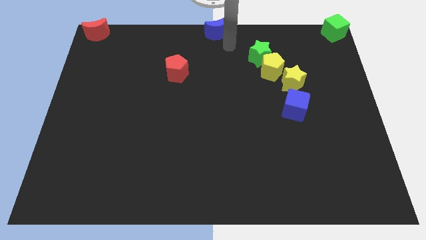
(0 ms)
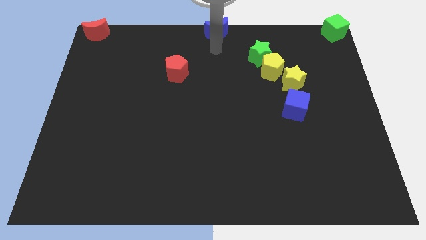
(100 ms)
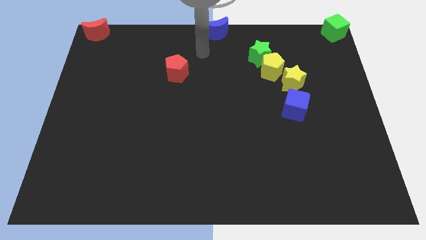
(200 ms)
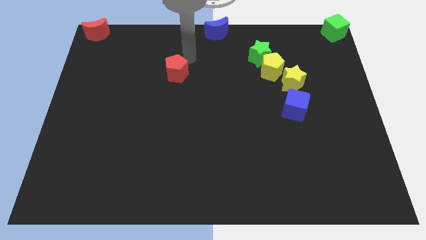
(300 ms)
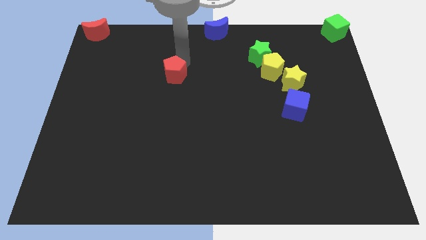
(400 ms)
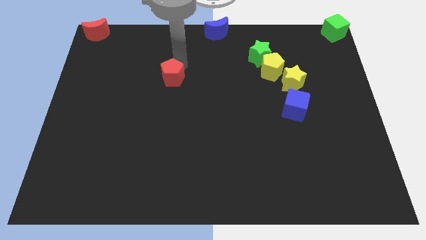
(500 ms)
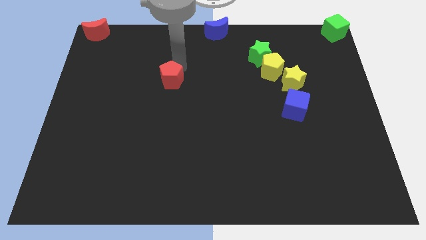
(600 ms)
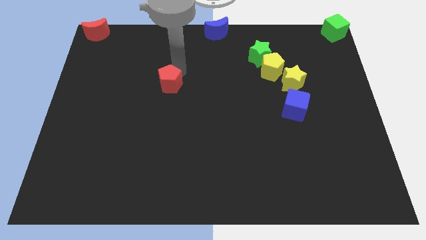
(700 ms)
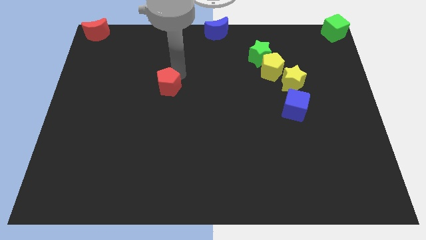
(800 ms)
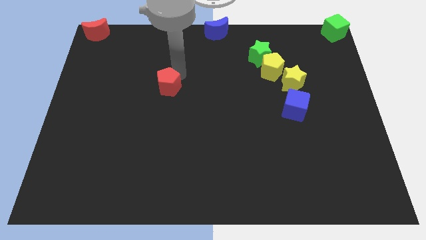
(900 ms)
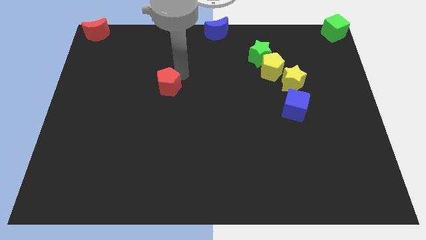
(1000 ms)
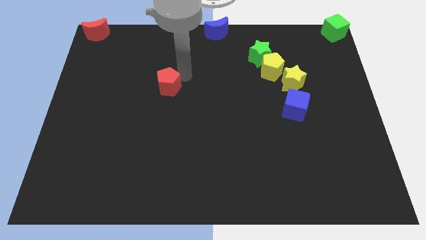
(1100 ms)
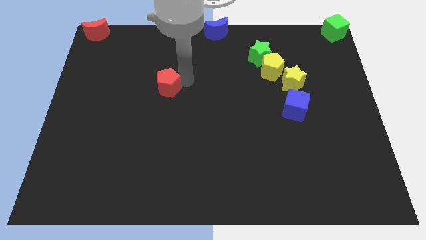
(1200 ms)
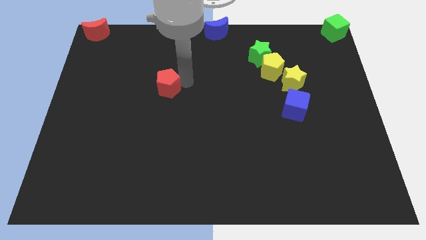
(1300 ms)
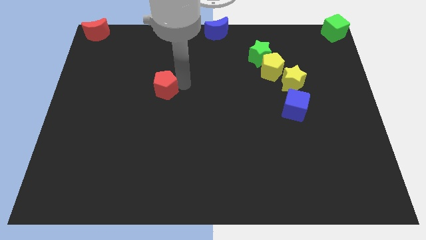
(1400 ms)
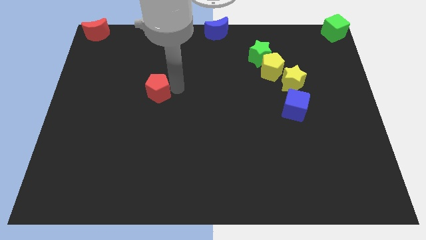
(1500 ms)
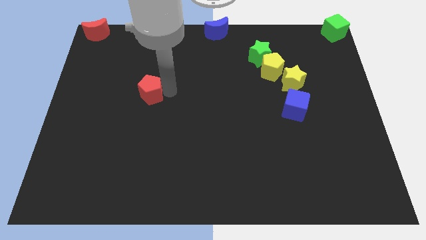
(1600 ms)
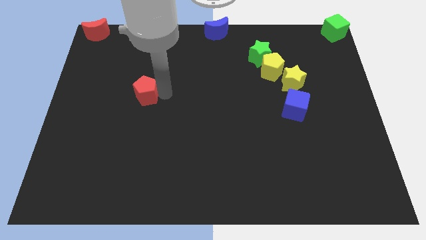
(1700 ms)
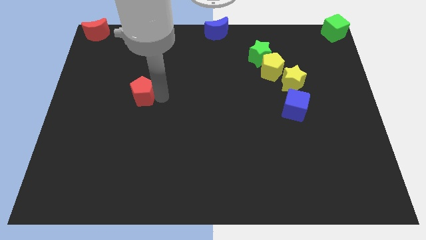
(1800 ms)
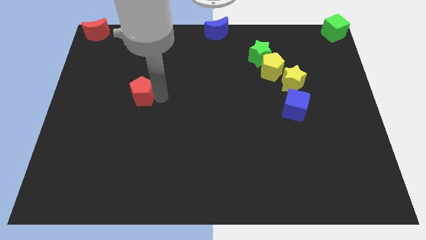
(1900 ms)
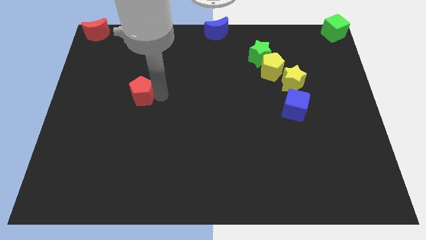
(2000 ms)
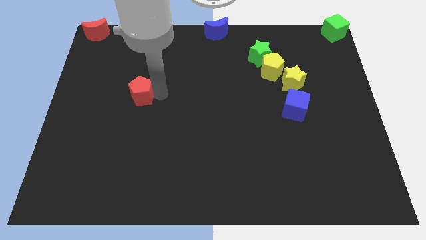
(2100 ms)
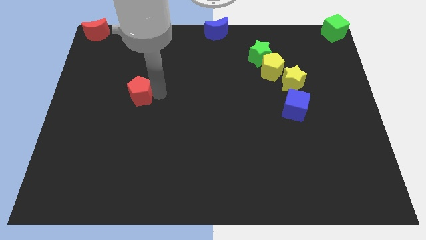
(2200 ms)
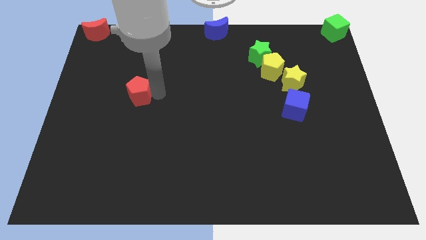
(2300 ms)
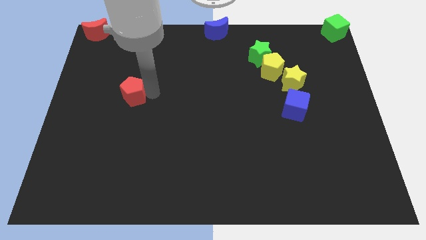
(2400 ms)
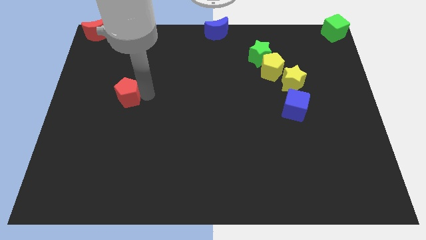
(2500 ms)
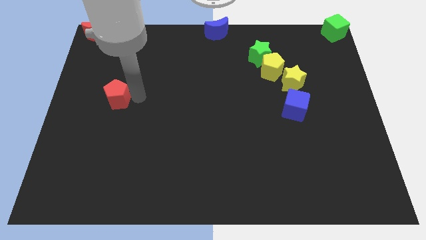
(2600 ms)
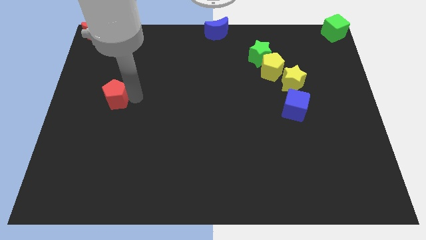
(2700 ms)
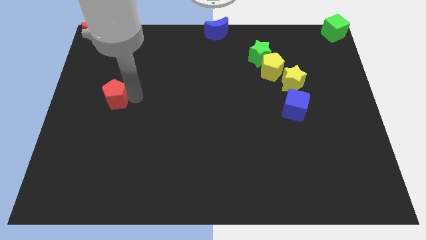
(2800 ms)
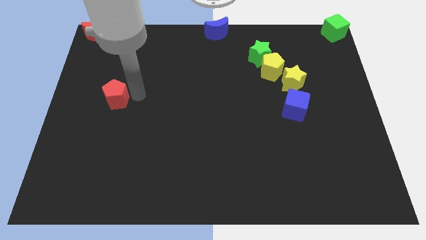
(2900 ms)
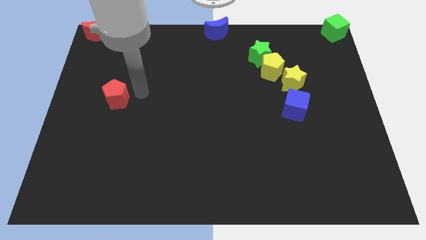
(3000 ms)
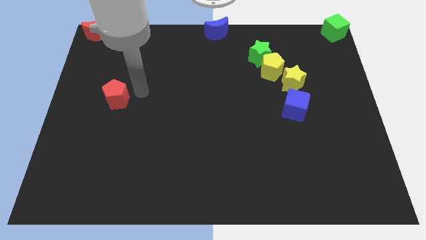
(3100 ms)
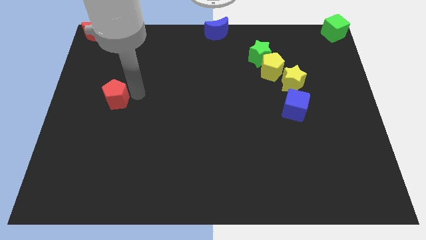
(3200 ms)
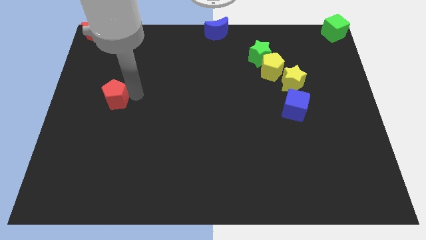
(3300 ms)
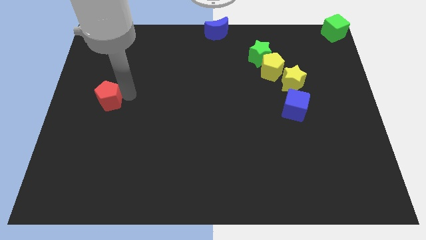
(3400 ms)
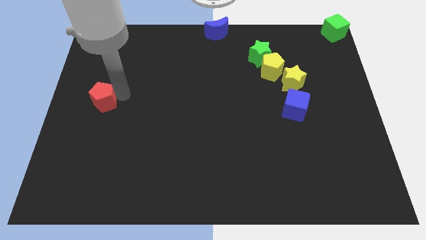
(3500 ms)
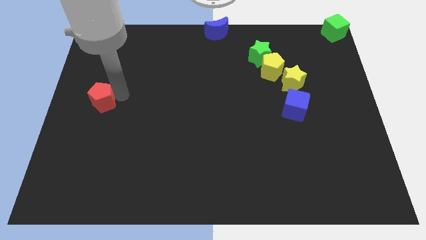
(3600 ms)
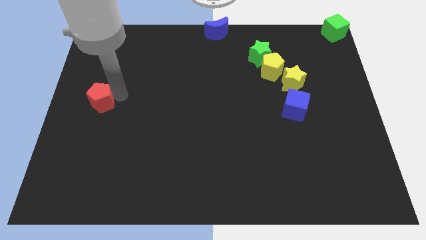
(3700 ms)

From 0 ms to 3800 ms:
move the red pentagon towards the center right

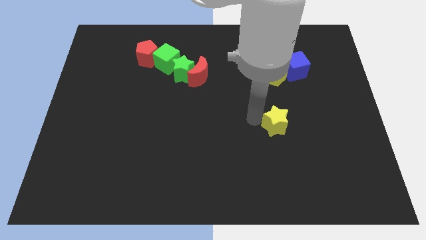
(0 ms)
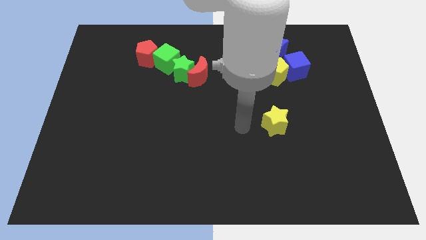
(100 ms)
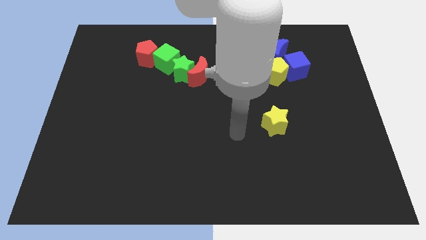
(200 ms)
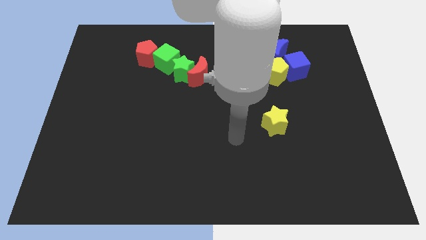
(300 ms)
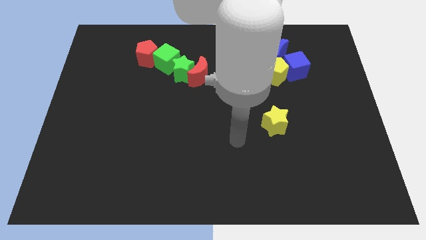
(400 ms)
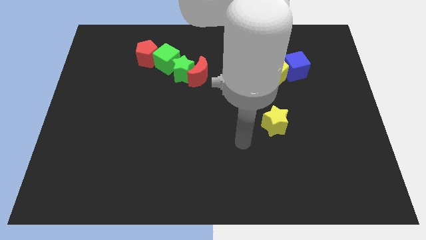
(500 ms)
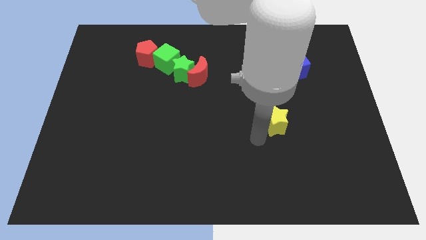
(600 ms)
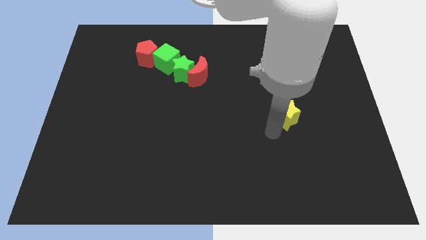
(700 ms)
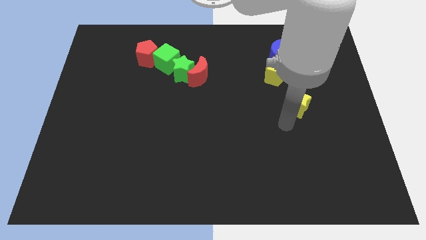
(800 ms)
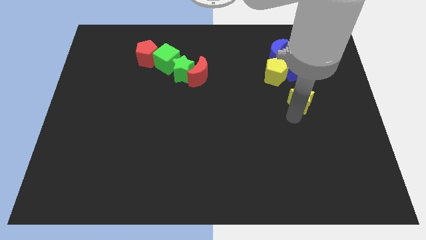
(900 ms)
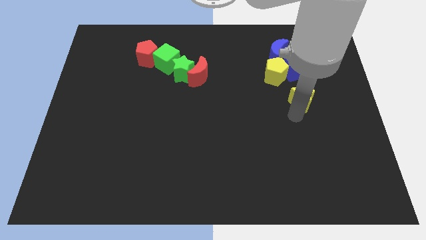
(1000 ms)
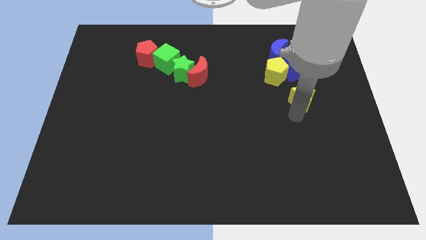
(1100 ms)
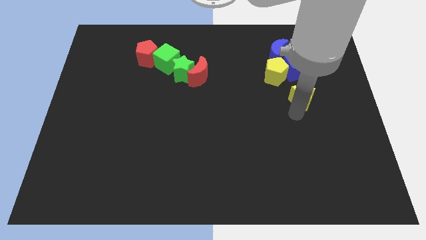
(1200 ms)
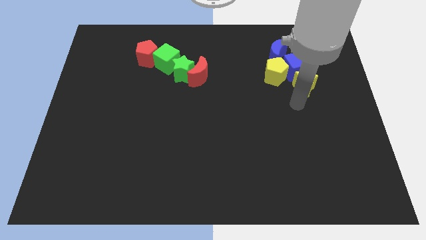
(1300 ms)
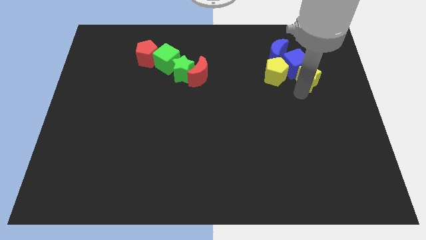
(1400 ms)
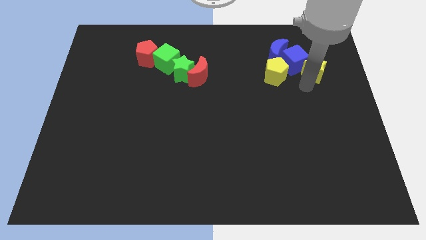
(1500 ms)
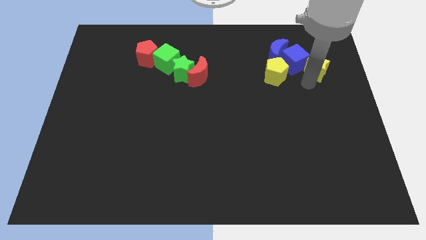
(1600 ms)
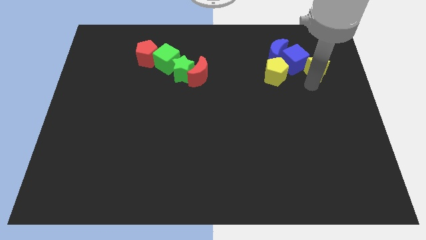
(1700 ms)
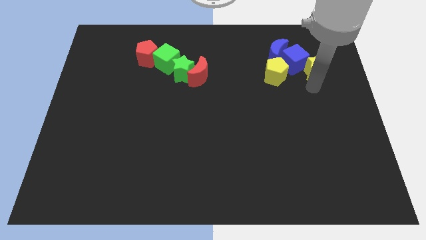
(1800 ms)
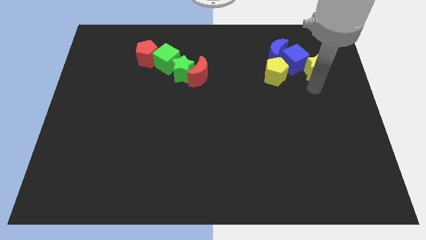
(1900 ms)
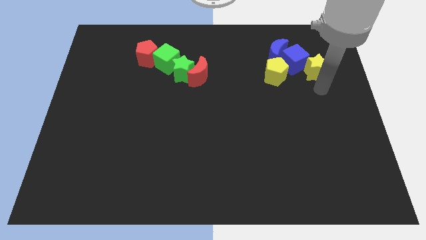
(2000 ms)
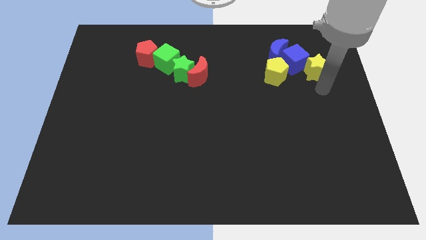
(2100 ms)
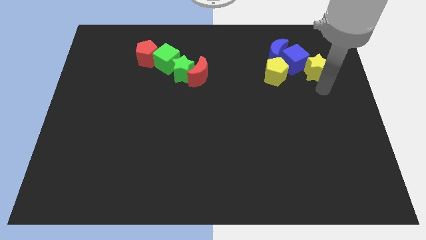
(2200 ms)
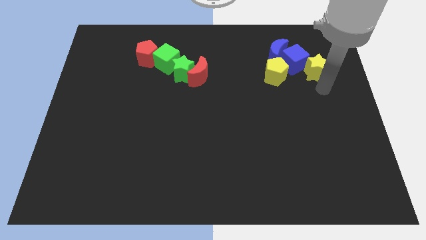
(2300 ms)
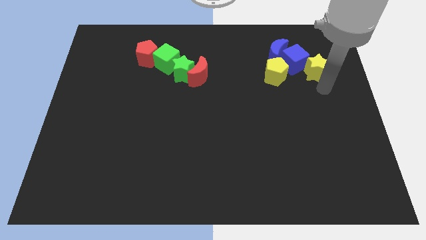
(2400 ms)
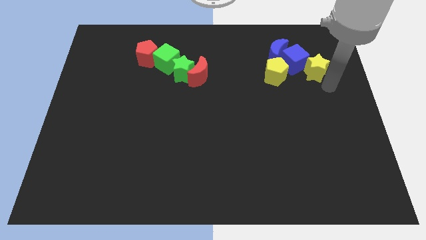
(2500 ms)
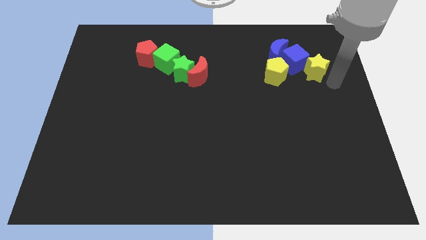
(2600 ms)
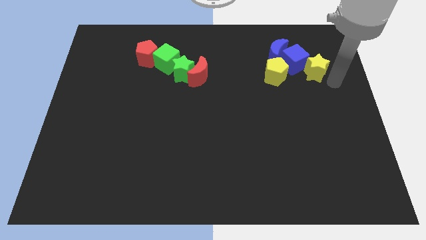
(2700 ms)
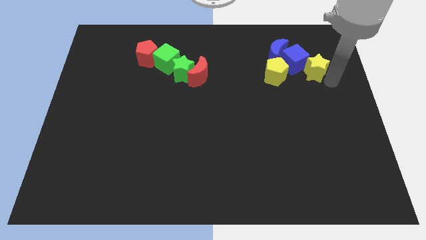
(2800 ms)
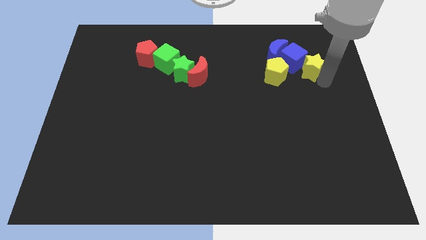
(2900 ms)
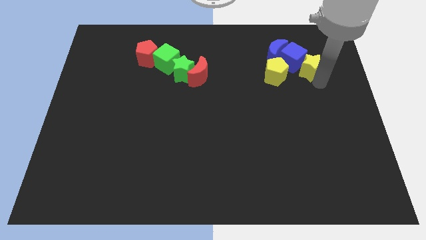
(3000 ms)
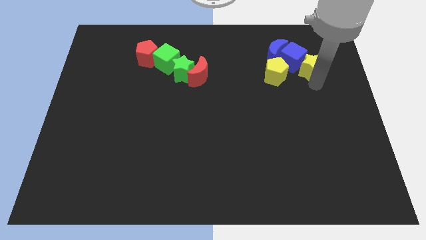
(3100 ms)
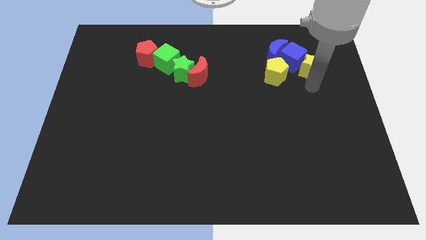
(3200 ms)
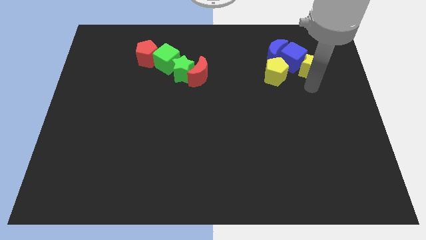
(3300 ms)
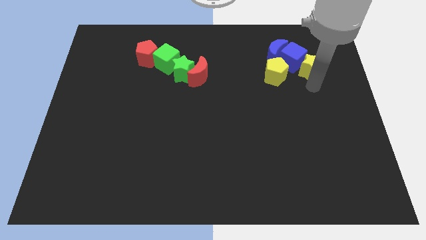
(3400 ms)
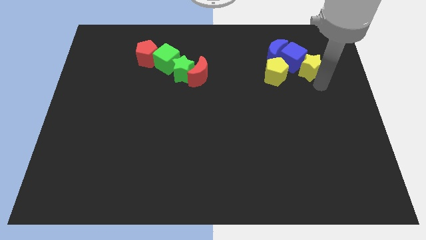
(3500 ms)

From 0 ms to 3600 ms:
push the yellow star to the right side of the blue cube

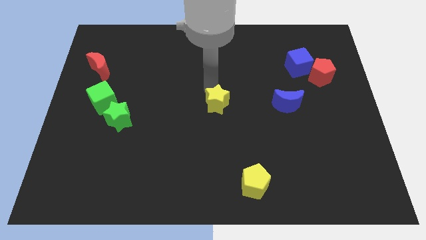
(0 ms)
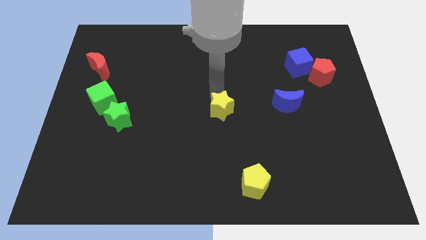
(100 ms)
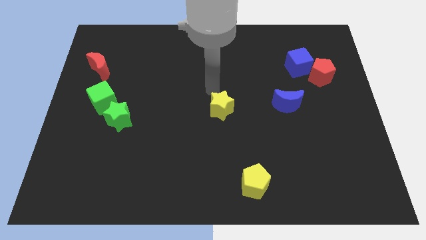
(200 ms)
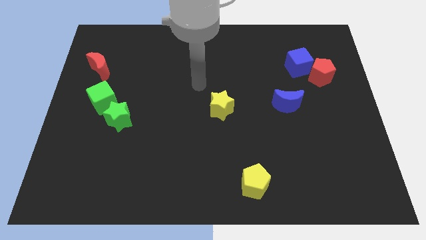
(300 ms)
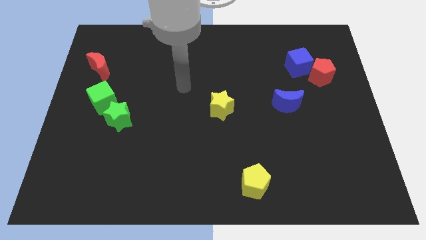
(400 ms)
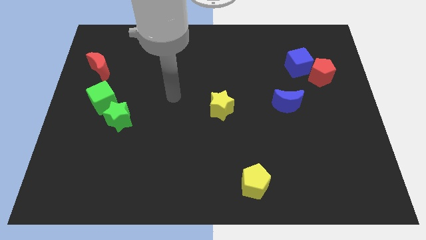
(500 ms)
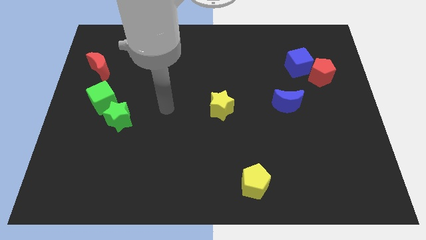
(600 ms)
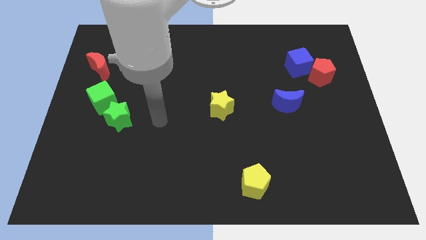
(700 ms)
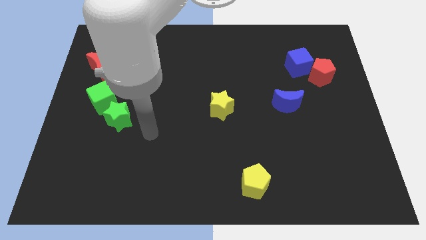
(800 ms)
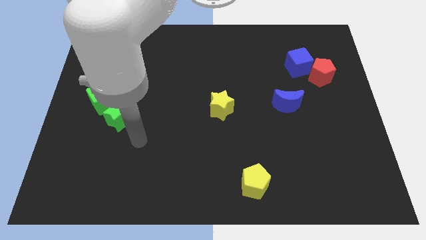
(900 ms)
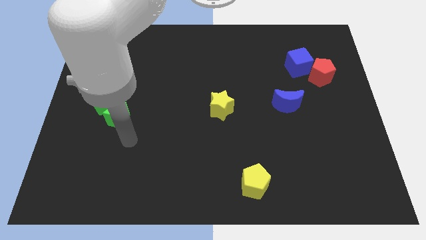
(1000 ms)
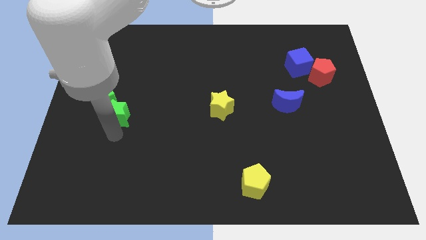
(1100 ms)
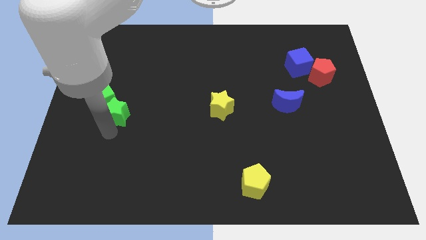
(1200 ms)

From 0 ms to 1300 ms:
place your arm below green star

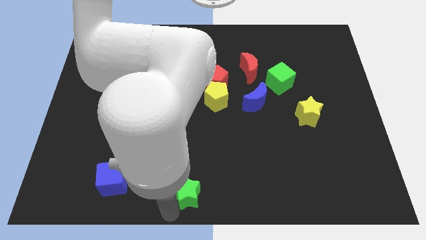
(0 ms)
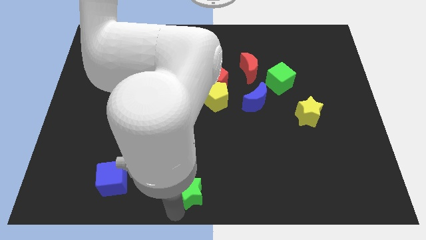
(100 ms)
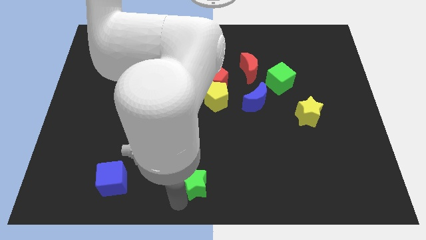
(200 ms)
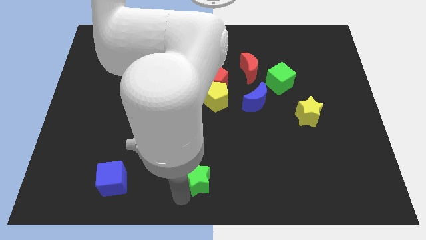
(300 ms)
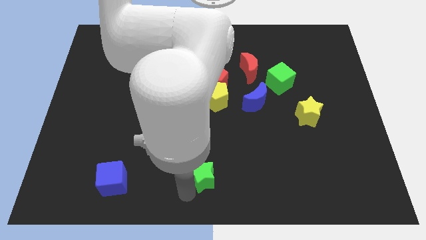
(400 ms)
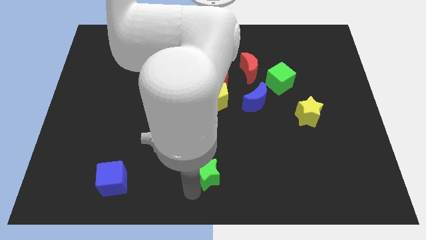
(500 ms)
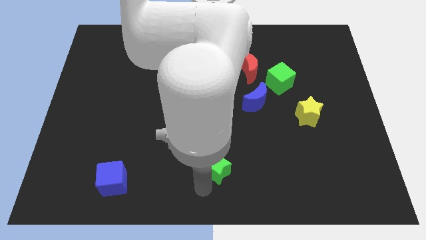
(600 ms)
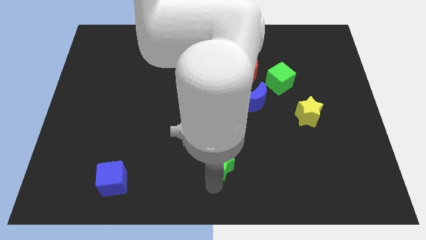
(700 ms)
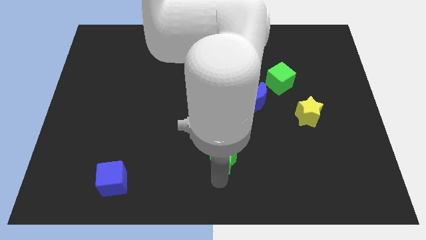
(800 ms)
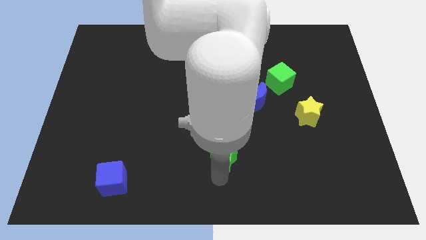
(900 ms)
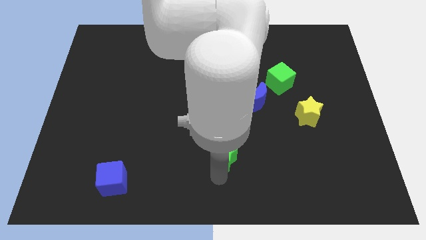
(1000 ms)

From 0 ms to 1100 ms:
push the green star upward
